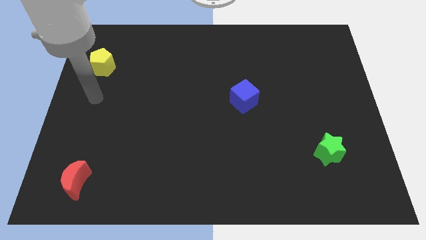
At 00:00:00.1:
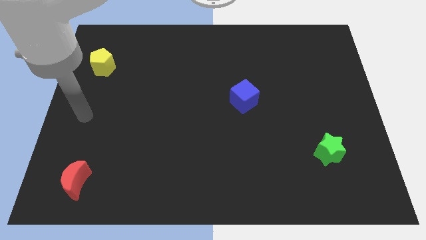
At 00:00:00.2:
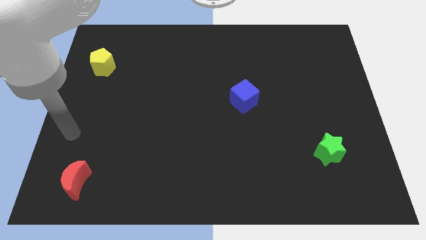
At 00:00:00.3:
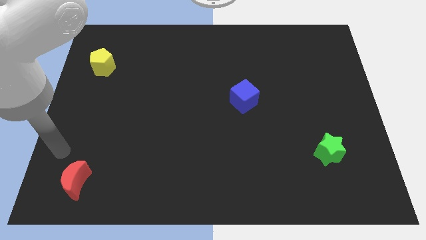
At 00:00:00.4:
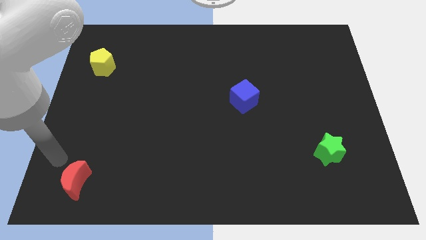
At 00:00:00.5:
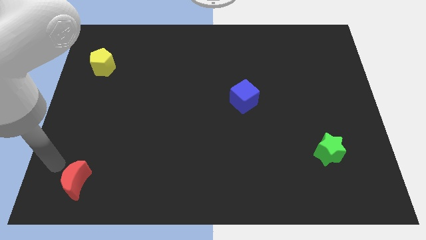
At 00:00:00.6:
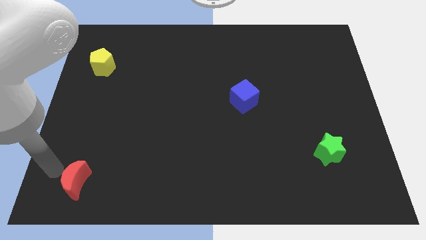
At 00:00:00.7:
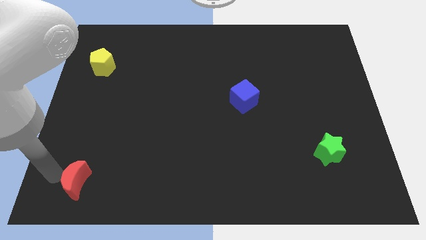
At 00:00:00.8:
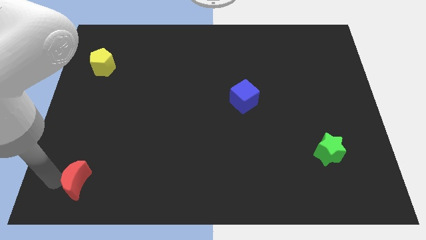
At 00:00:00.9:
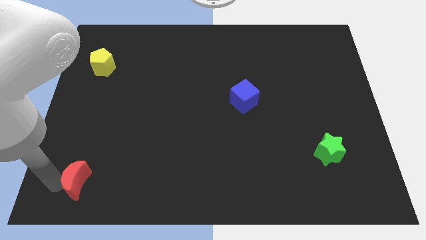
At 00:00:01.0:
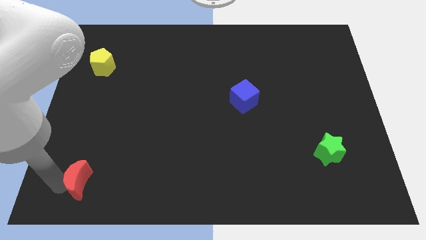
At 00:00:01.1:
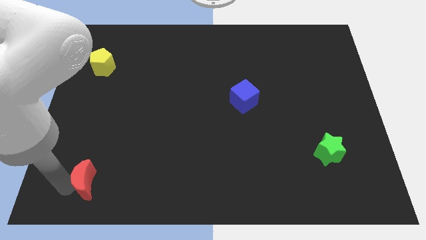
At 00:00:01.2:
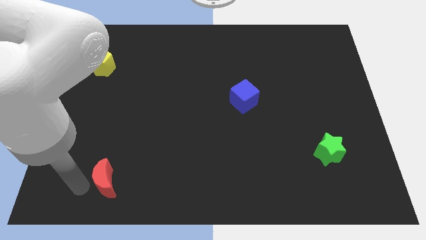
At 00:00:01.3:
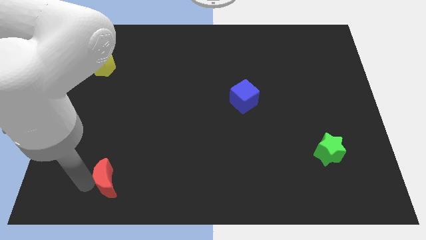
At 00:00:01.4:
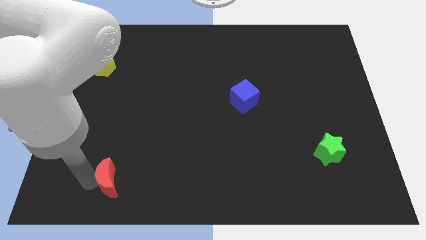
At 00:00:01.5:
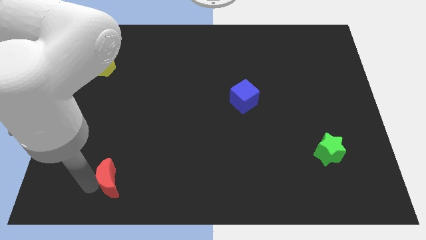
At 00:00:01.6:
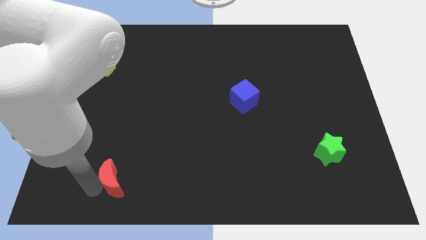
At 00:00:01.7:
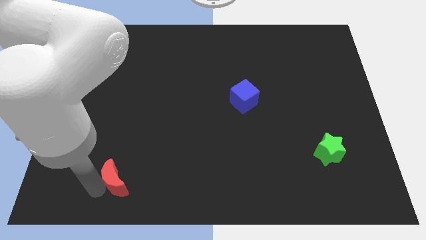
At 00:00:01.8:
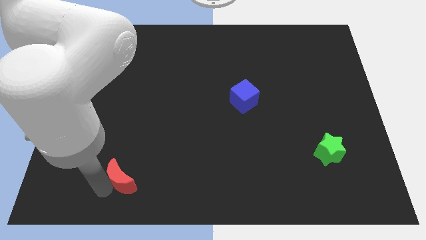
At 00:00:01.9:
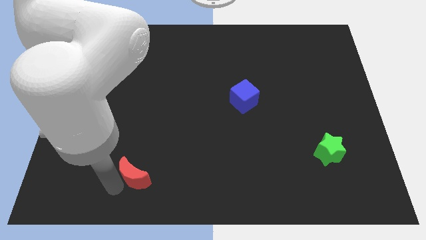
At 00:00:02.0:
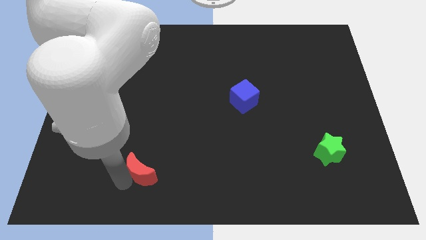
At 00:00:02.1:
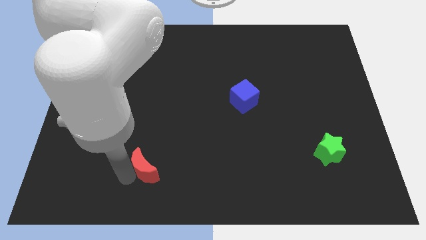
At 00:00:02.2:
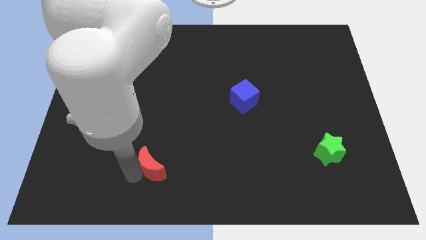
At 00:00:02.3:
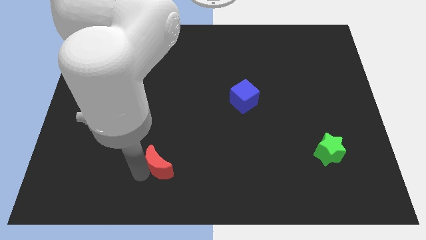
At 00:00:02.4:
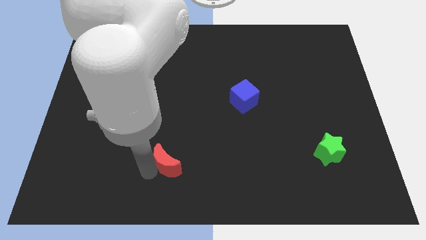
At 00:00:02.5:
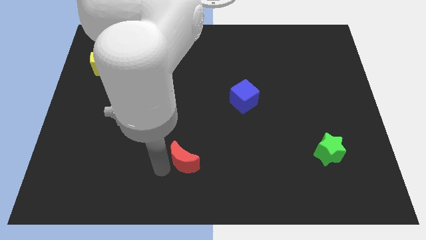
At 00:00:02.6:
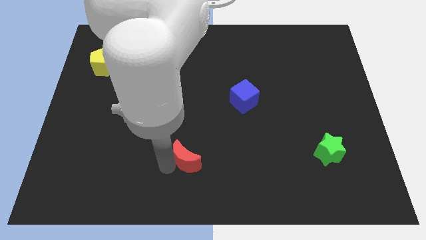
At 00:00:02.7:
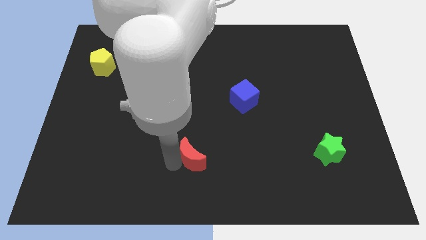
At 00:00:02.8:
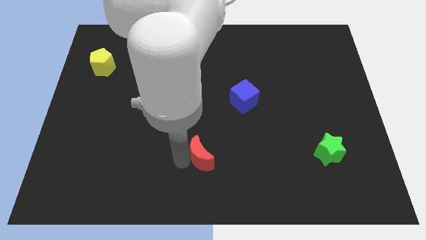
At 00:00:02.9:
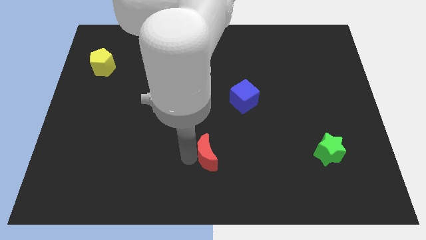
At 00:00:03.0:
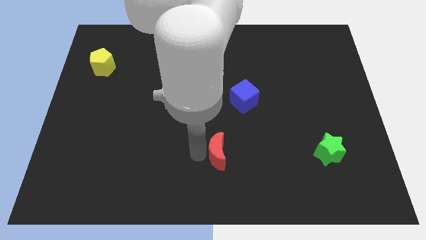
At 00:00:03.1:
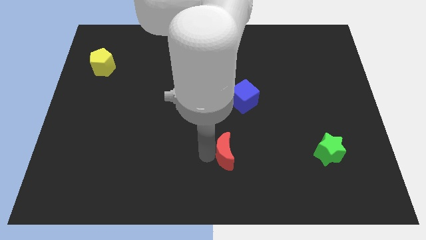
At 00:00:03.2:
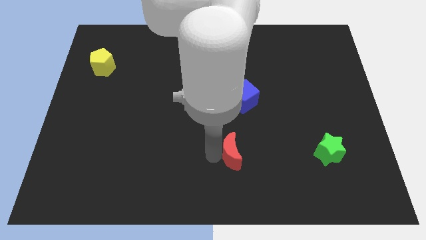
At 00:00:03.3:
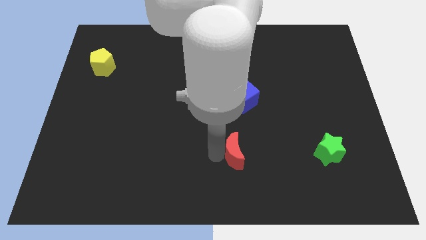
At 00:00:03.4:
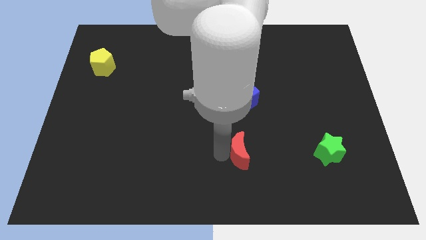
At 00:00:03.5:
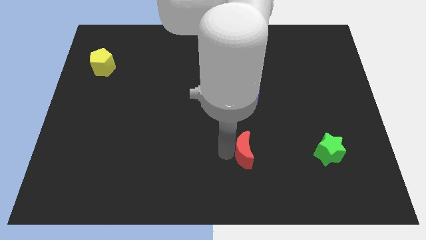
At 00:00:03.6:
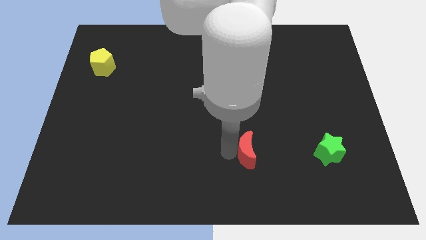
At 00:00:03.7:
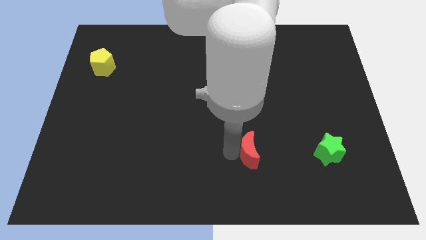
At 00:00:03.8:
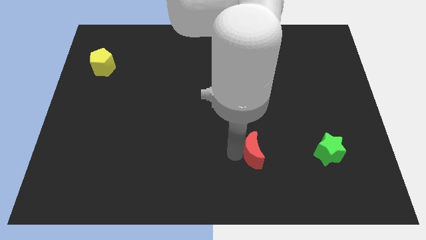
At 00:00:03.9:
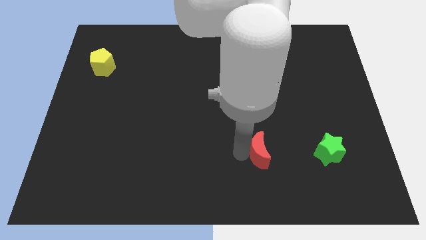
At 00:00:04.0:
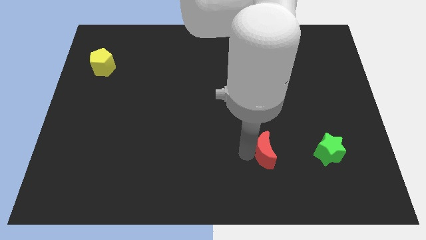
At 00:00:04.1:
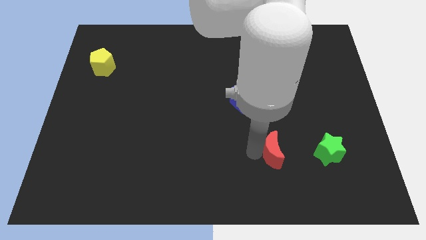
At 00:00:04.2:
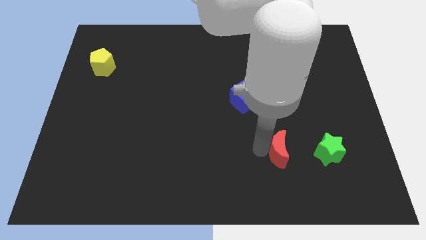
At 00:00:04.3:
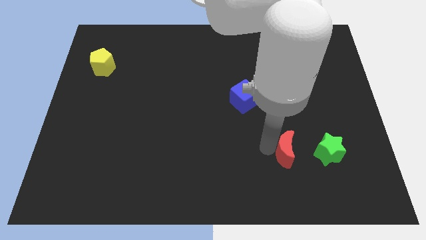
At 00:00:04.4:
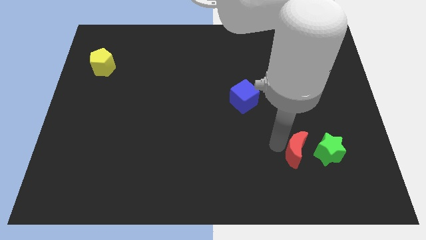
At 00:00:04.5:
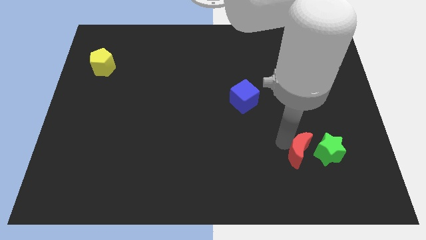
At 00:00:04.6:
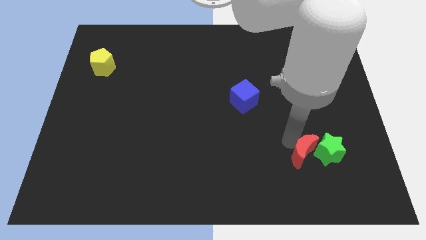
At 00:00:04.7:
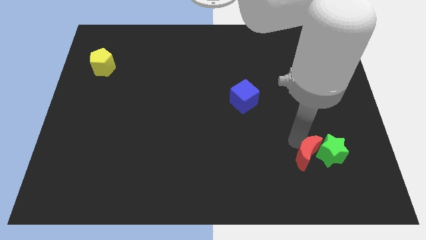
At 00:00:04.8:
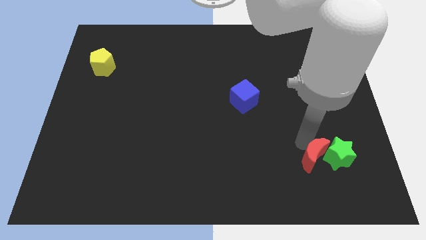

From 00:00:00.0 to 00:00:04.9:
move the red block to the green star

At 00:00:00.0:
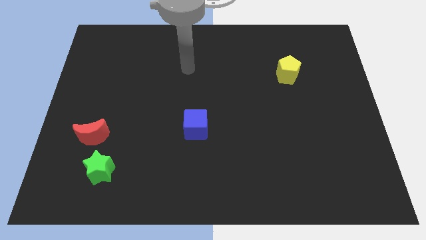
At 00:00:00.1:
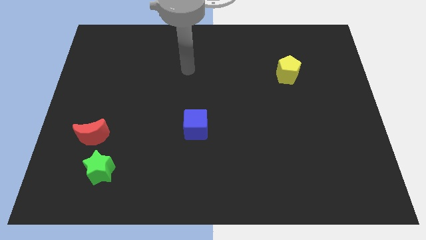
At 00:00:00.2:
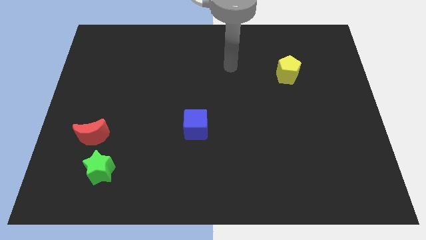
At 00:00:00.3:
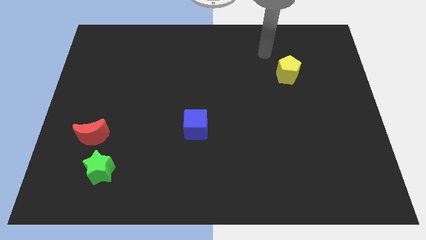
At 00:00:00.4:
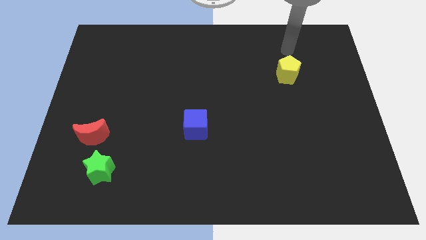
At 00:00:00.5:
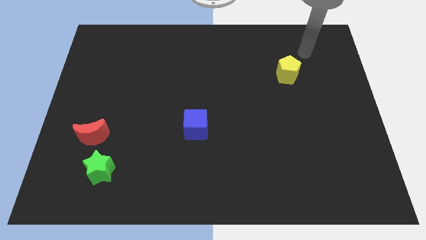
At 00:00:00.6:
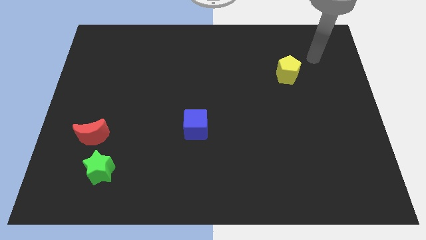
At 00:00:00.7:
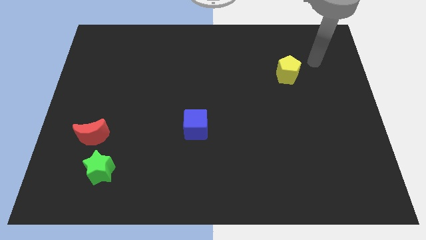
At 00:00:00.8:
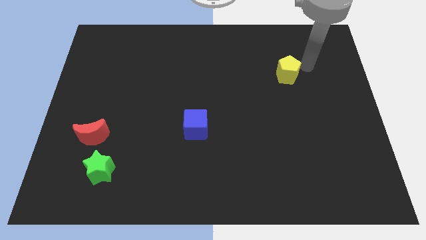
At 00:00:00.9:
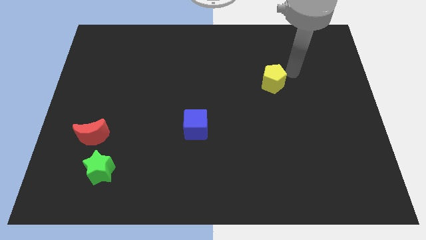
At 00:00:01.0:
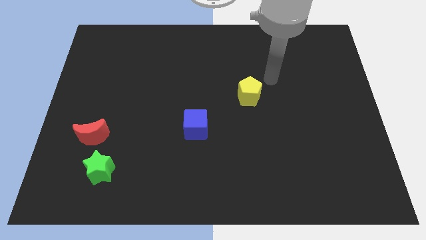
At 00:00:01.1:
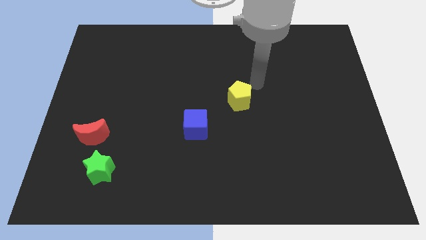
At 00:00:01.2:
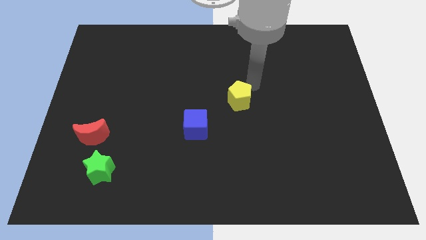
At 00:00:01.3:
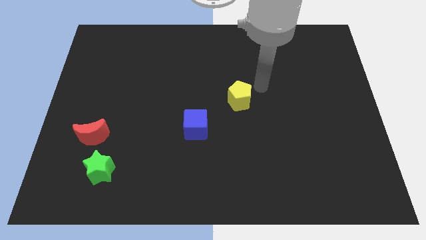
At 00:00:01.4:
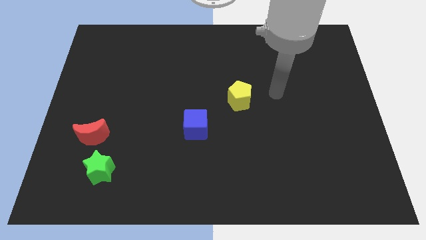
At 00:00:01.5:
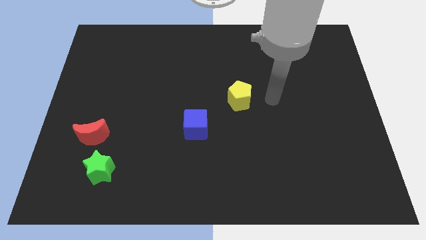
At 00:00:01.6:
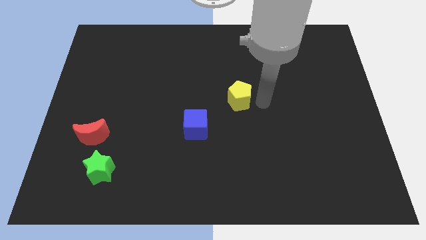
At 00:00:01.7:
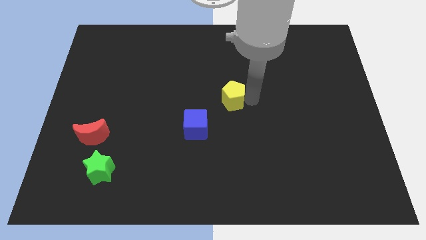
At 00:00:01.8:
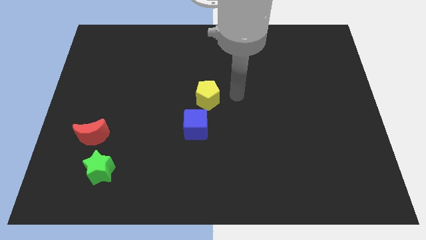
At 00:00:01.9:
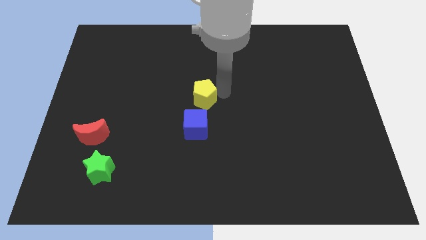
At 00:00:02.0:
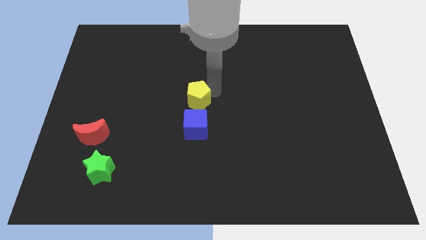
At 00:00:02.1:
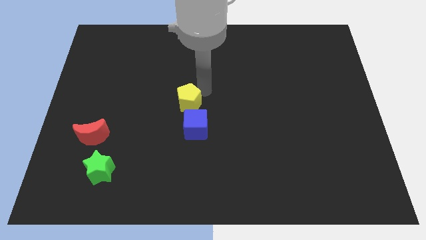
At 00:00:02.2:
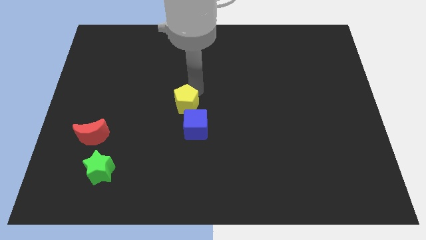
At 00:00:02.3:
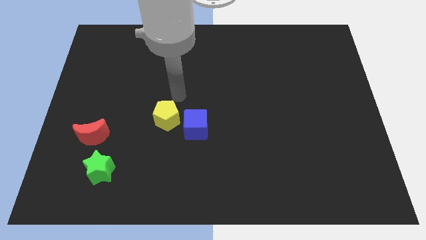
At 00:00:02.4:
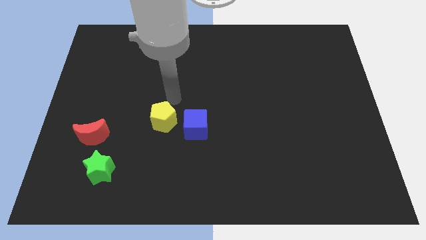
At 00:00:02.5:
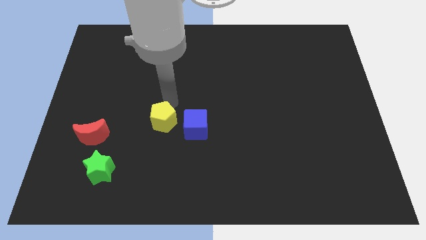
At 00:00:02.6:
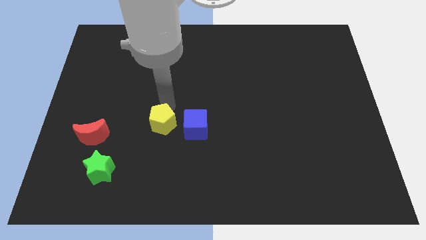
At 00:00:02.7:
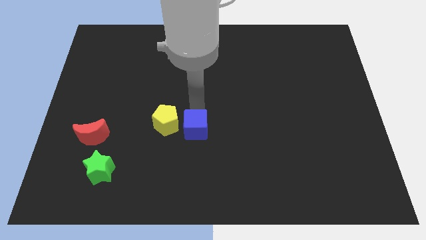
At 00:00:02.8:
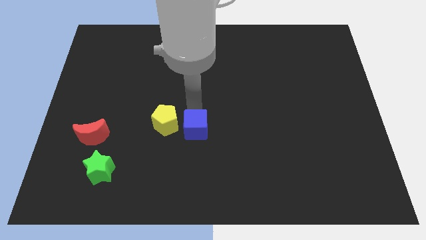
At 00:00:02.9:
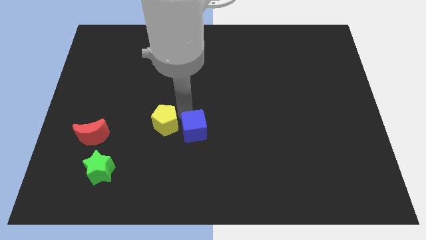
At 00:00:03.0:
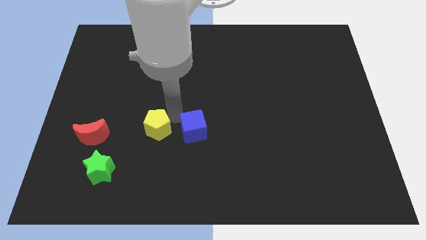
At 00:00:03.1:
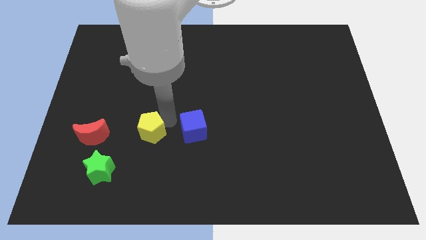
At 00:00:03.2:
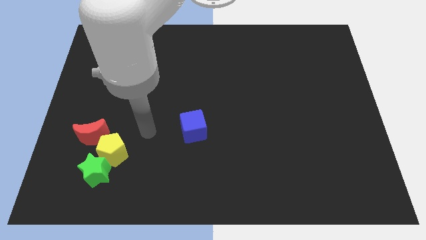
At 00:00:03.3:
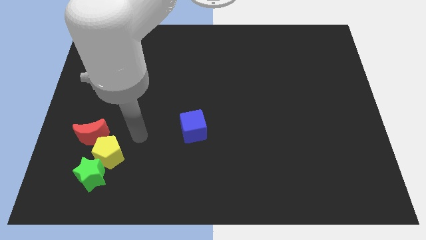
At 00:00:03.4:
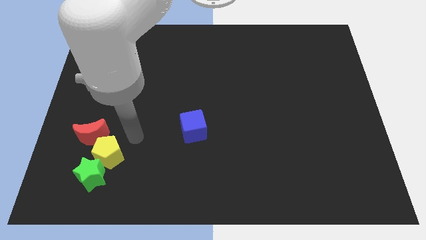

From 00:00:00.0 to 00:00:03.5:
put the yellow pentagon to the star
